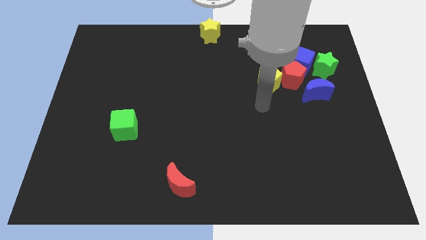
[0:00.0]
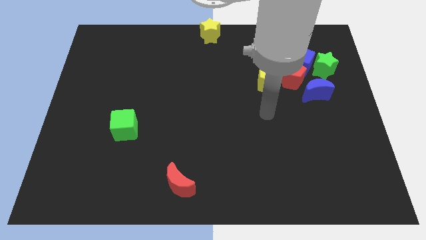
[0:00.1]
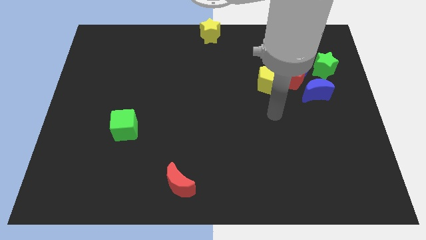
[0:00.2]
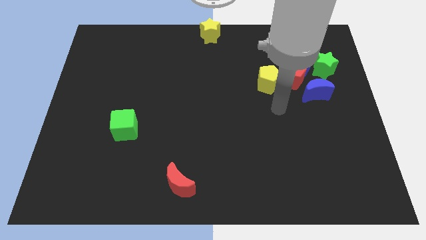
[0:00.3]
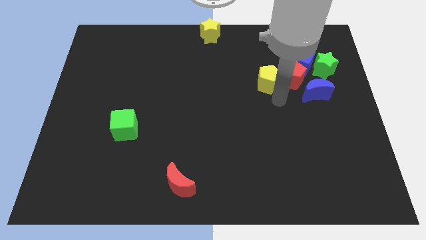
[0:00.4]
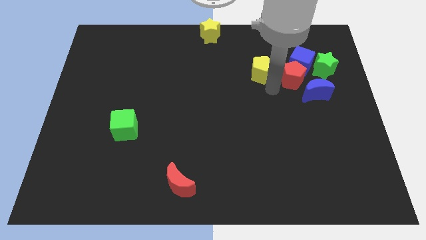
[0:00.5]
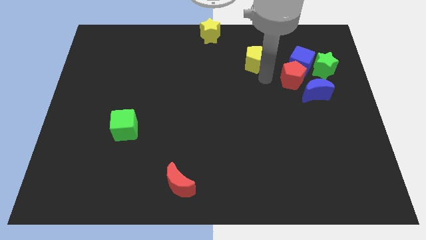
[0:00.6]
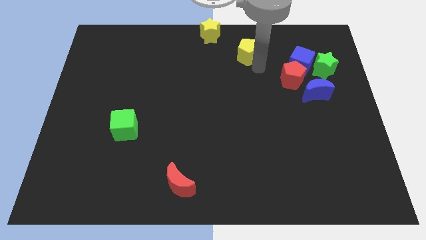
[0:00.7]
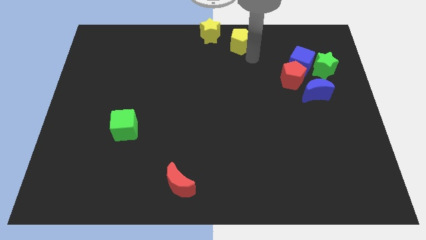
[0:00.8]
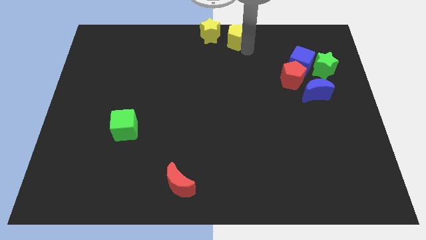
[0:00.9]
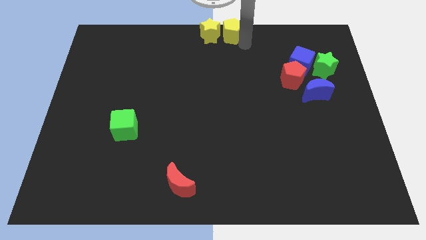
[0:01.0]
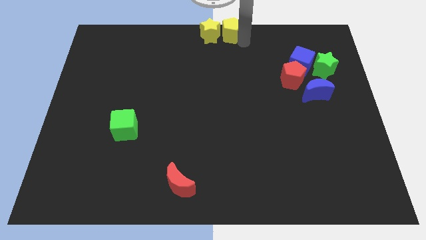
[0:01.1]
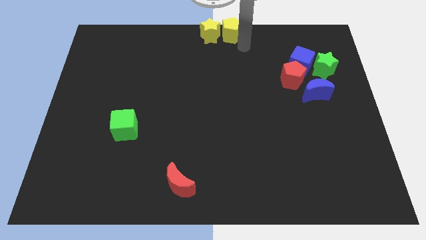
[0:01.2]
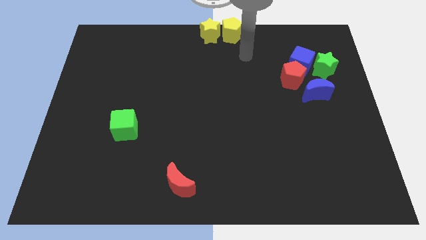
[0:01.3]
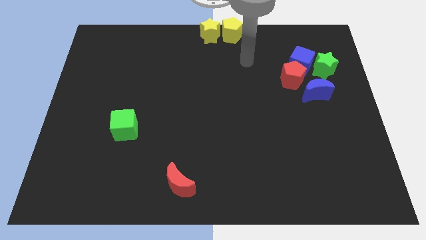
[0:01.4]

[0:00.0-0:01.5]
put the yellow pentagon beside the yellow star

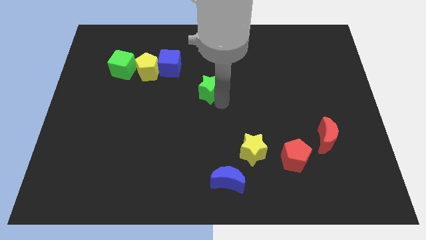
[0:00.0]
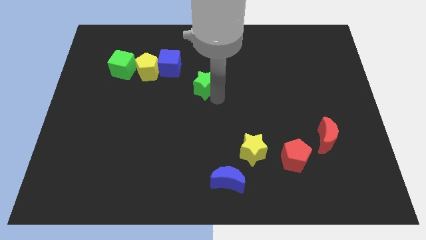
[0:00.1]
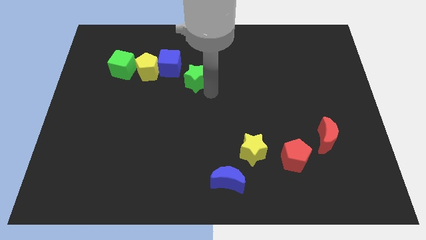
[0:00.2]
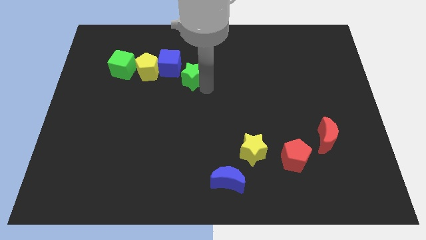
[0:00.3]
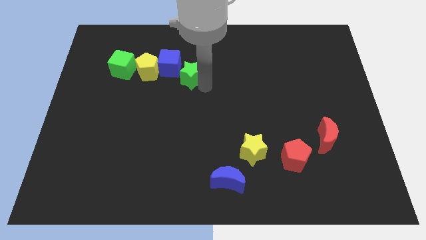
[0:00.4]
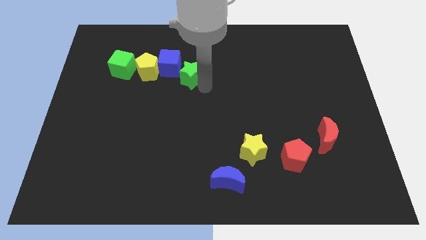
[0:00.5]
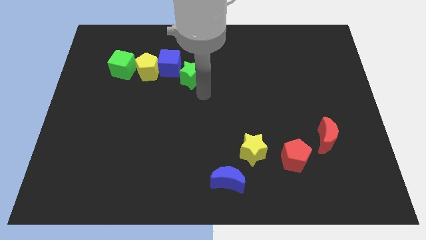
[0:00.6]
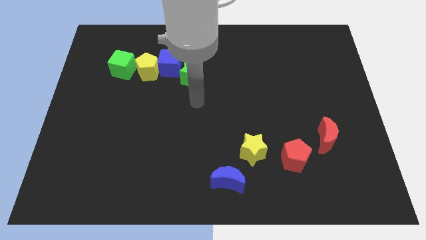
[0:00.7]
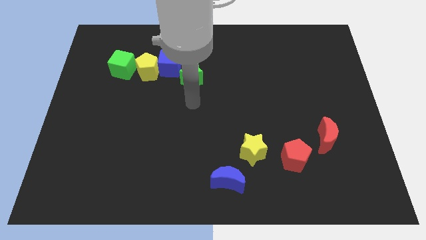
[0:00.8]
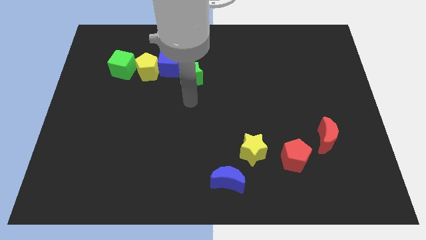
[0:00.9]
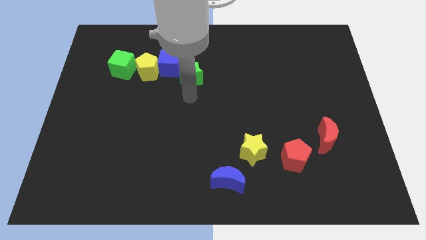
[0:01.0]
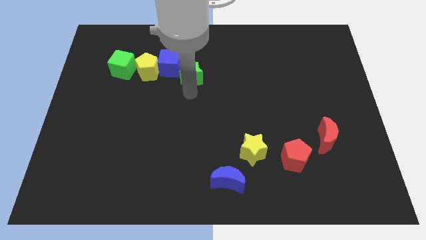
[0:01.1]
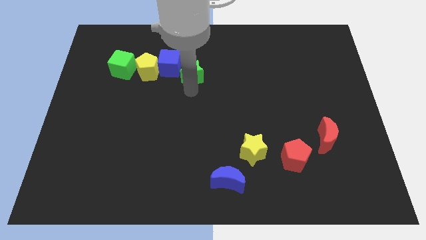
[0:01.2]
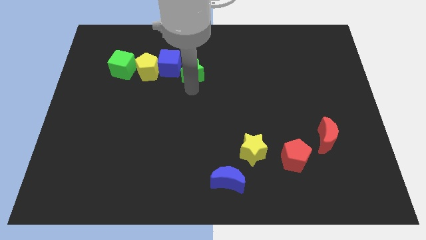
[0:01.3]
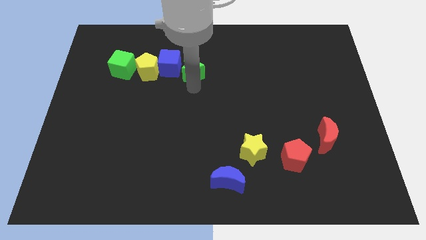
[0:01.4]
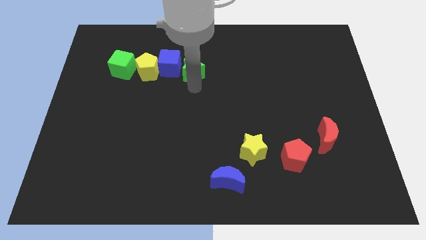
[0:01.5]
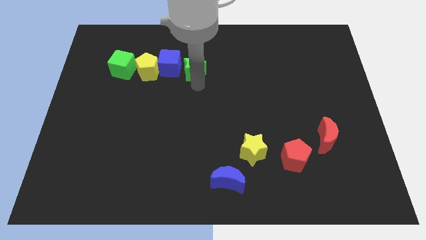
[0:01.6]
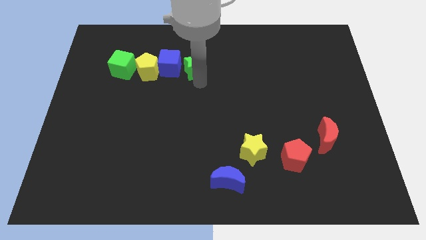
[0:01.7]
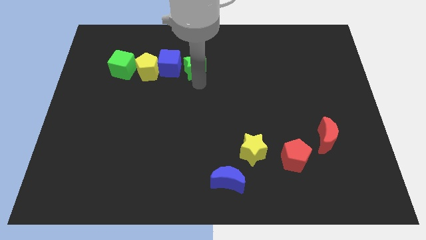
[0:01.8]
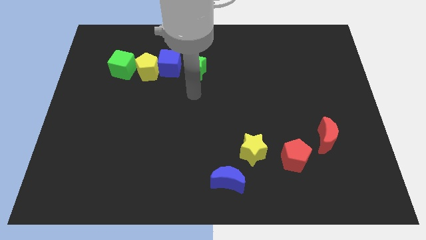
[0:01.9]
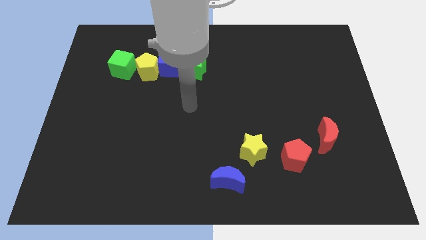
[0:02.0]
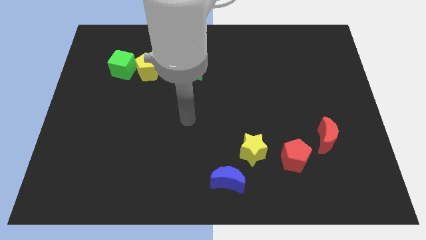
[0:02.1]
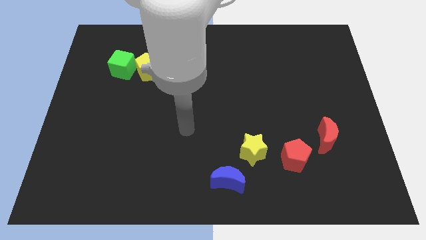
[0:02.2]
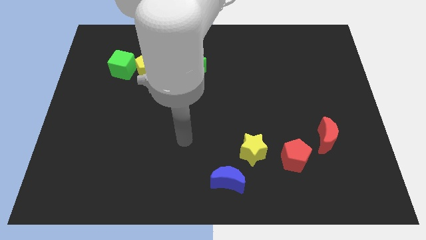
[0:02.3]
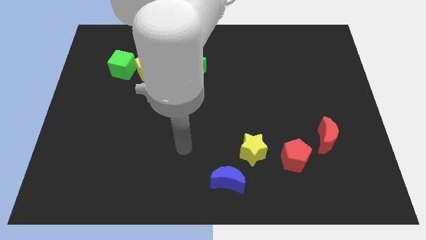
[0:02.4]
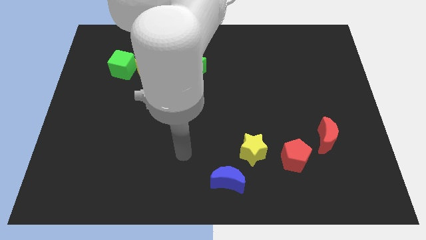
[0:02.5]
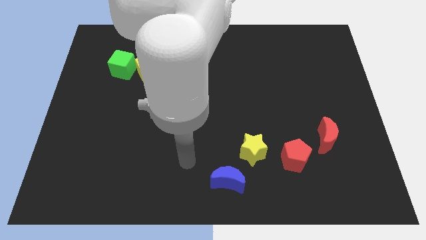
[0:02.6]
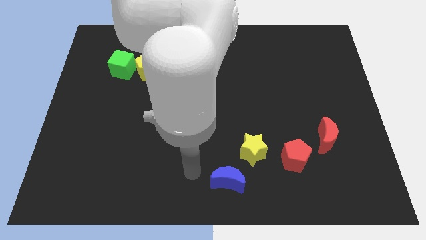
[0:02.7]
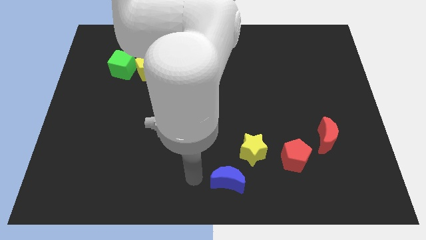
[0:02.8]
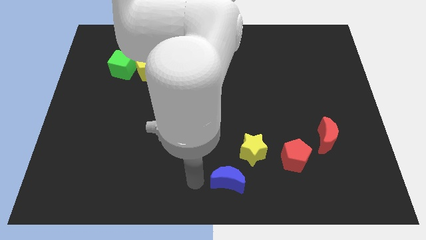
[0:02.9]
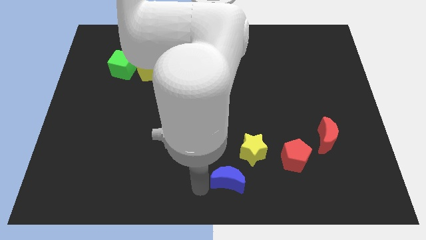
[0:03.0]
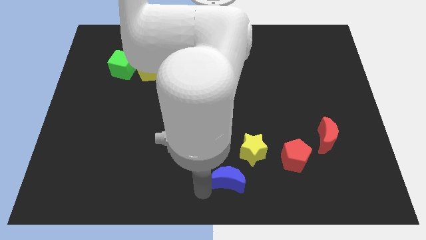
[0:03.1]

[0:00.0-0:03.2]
put the green star parallel right to the blue cube

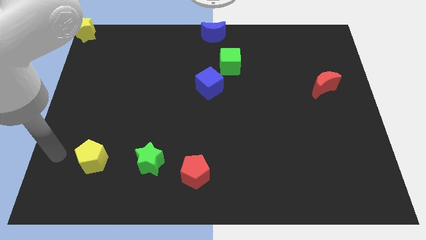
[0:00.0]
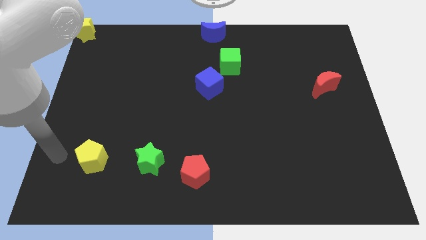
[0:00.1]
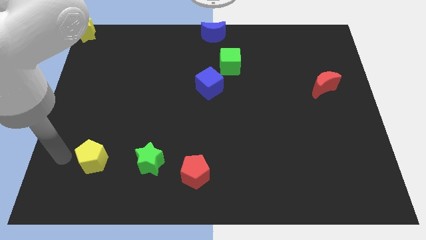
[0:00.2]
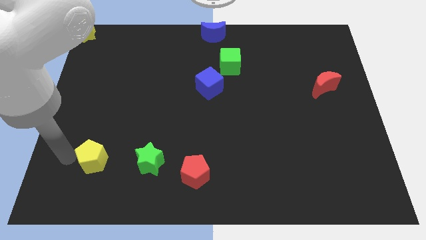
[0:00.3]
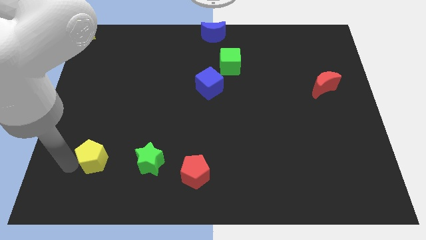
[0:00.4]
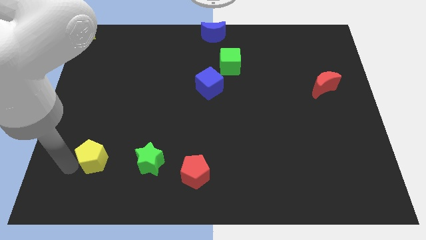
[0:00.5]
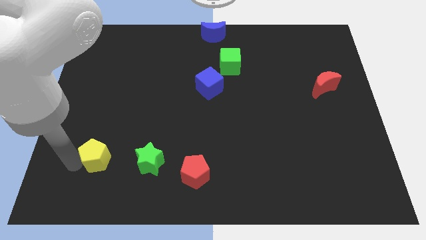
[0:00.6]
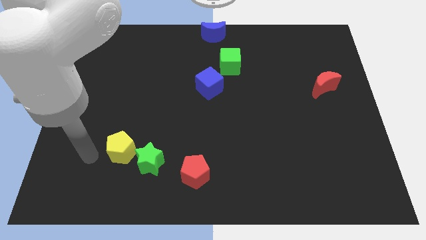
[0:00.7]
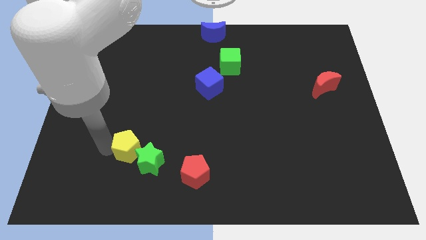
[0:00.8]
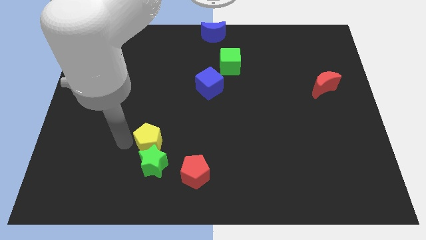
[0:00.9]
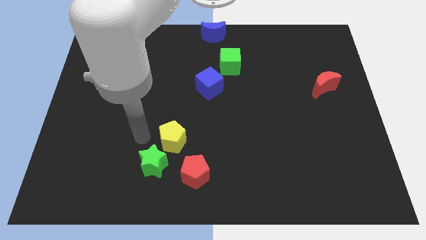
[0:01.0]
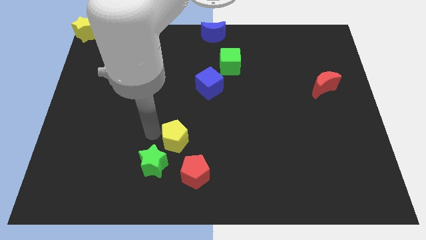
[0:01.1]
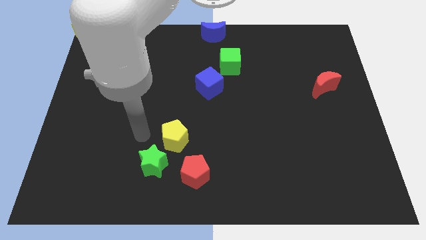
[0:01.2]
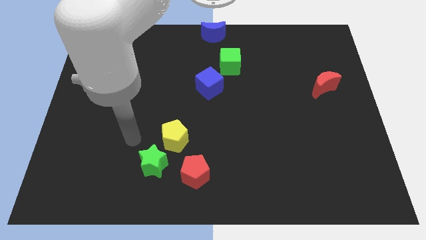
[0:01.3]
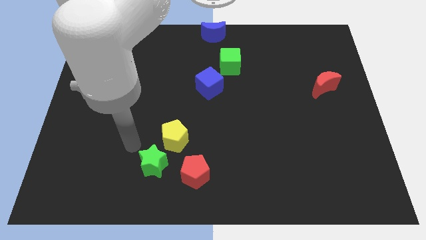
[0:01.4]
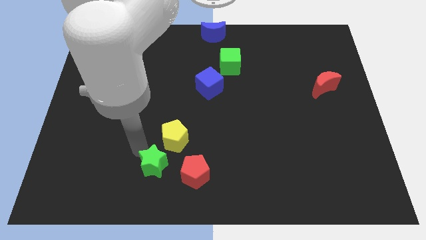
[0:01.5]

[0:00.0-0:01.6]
place the yellow pentagon above the green star

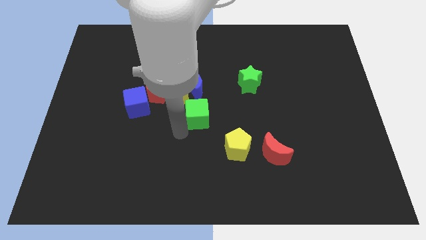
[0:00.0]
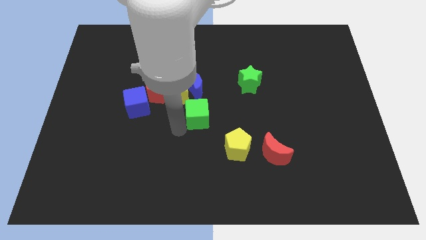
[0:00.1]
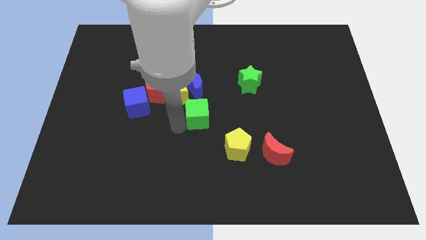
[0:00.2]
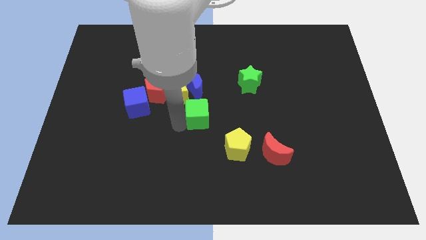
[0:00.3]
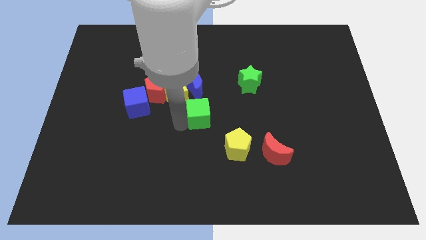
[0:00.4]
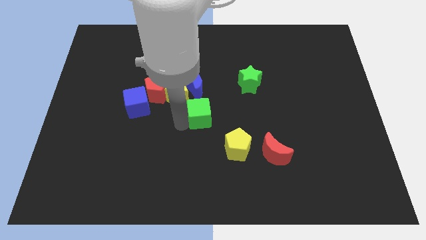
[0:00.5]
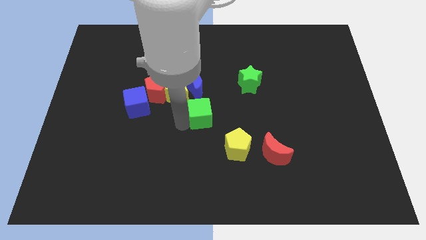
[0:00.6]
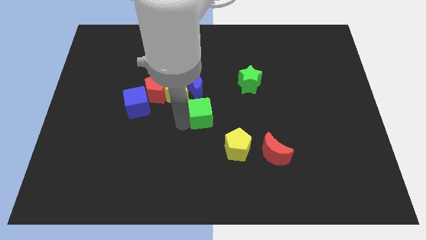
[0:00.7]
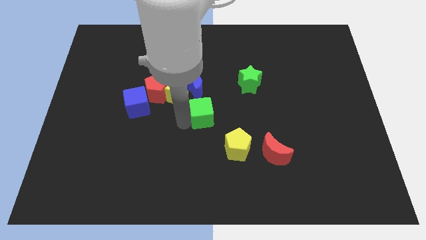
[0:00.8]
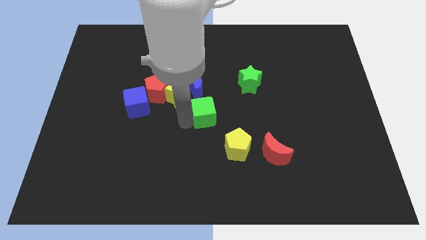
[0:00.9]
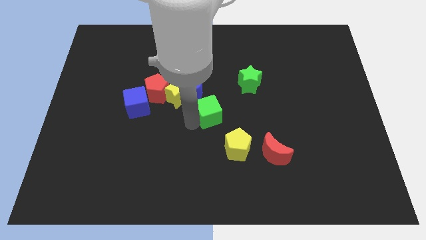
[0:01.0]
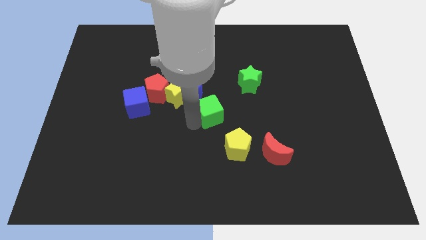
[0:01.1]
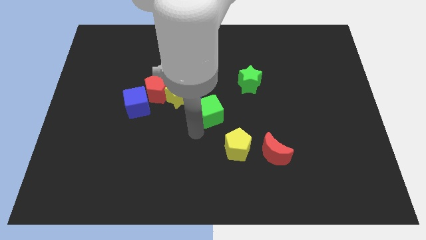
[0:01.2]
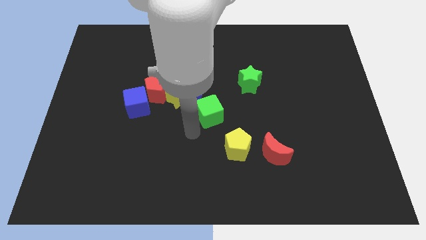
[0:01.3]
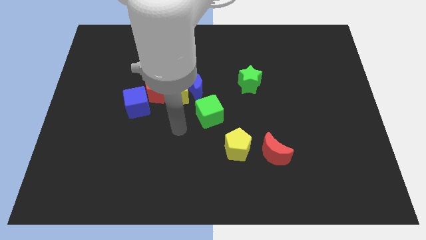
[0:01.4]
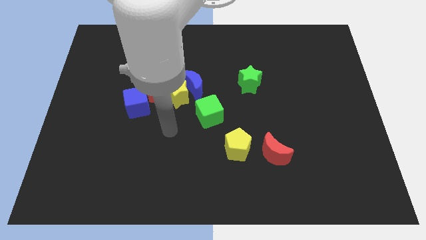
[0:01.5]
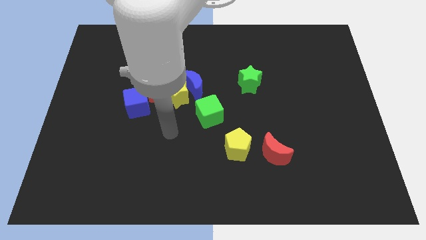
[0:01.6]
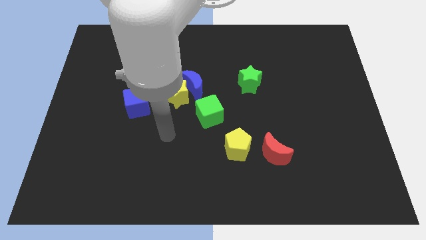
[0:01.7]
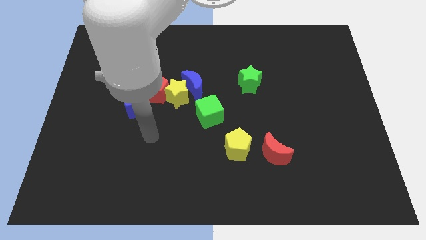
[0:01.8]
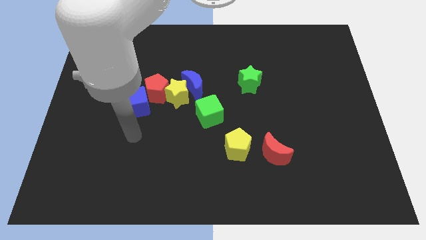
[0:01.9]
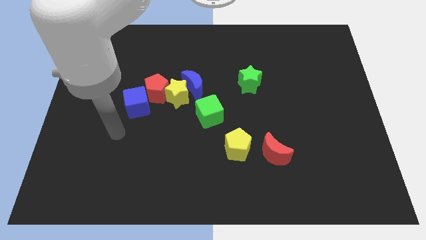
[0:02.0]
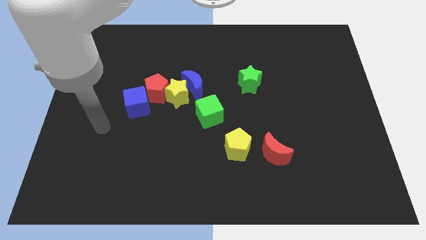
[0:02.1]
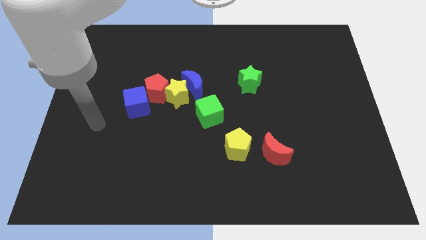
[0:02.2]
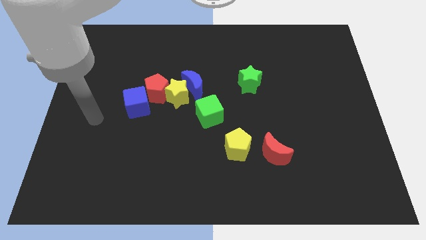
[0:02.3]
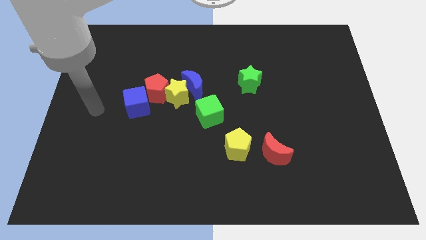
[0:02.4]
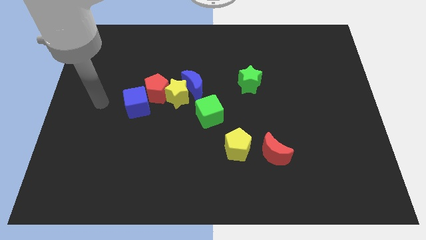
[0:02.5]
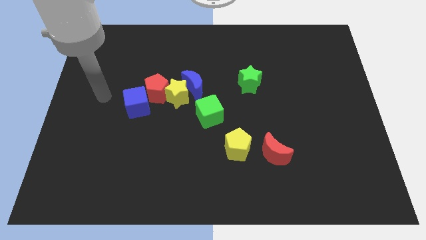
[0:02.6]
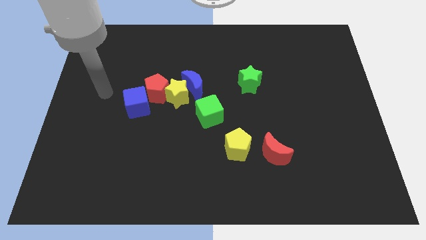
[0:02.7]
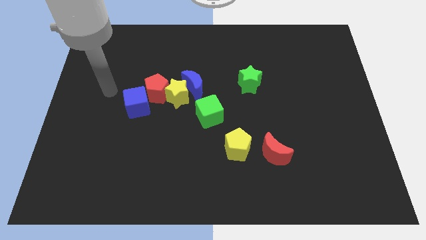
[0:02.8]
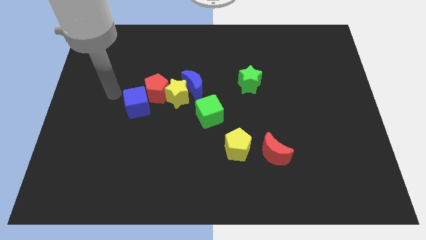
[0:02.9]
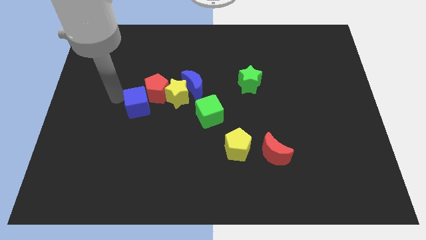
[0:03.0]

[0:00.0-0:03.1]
place the arm near the blue cube
